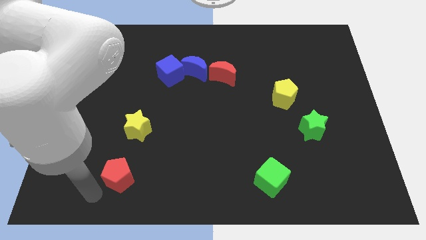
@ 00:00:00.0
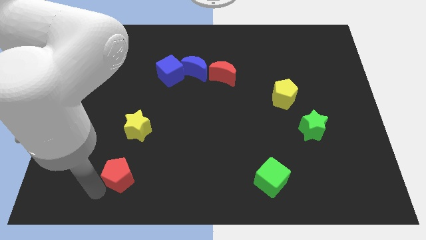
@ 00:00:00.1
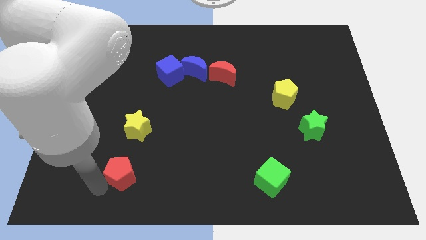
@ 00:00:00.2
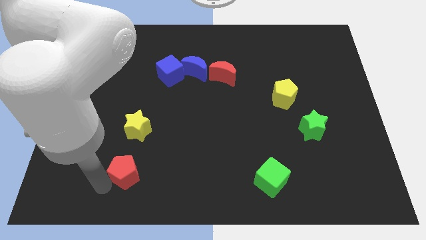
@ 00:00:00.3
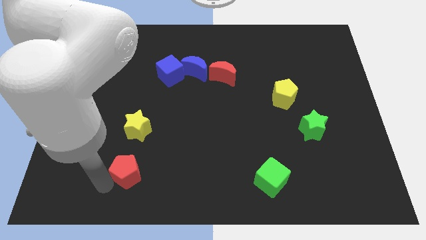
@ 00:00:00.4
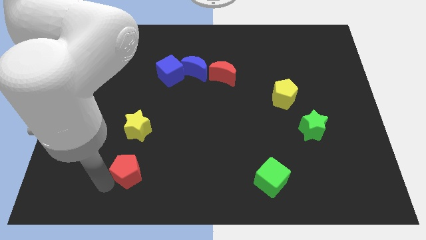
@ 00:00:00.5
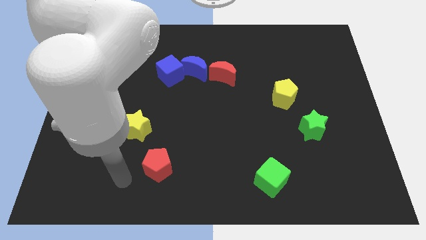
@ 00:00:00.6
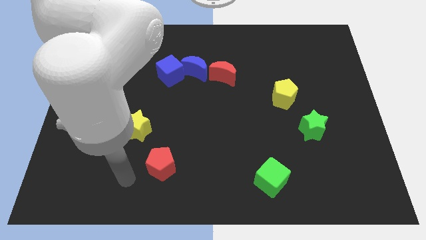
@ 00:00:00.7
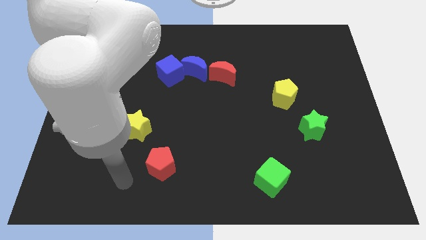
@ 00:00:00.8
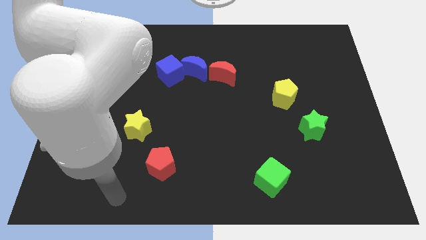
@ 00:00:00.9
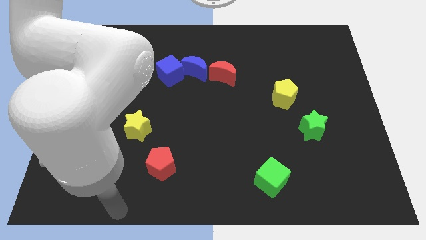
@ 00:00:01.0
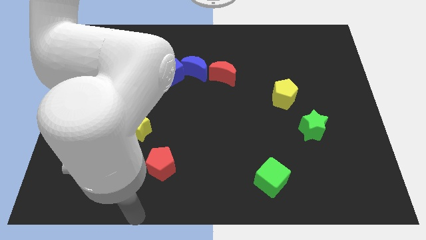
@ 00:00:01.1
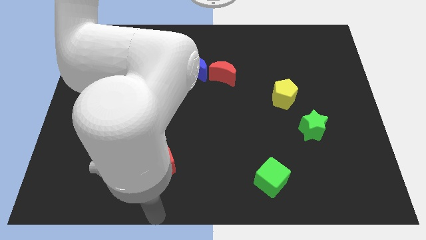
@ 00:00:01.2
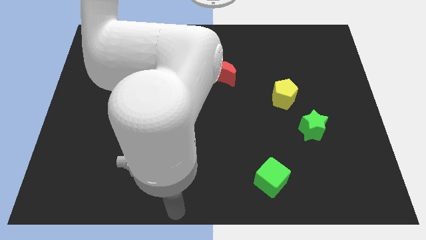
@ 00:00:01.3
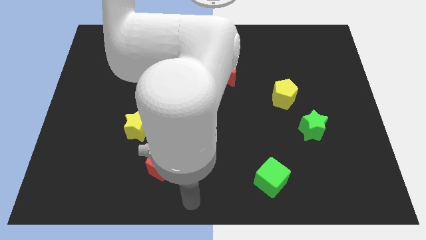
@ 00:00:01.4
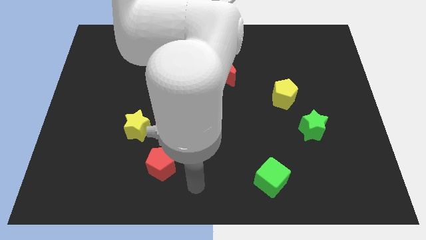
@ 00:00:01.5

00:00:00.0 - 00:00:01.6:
move the red pentagon to the bottom right of the yellow star

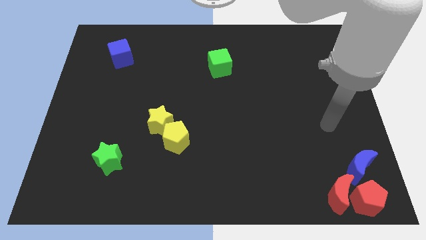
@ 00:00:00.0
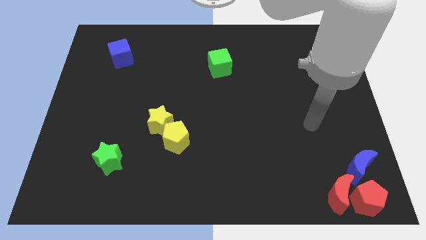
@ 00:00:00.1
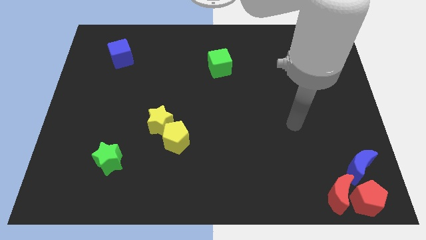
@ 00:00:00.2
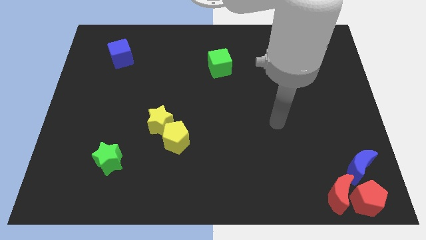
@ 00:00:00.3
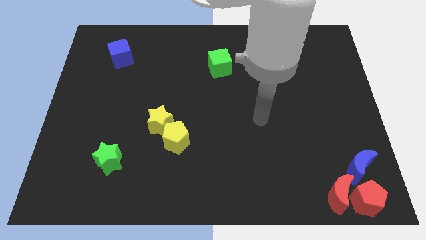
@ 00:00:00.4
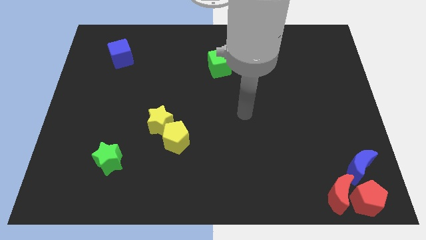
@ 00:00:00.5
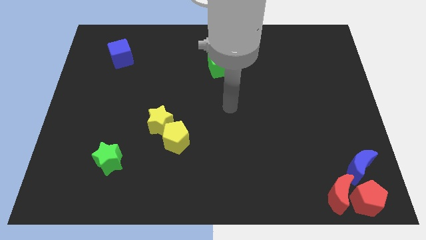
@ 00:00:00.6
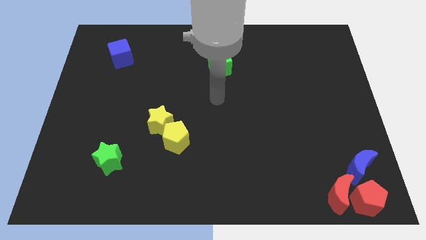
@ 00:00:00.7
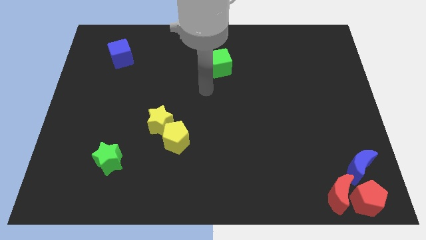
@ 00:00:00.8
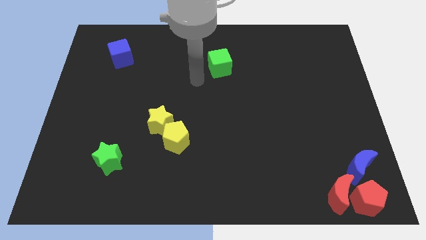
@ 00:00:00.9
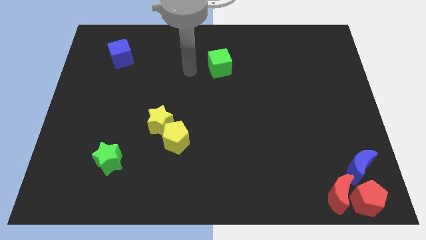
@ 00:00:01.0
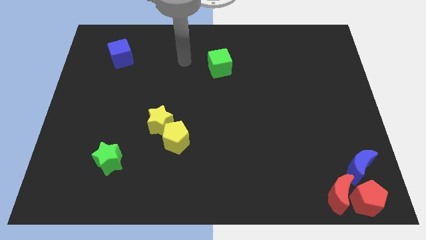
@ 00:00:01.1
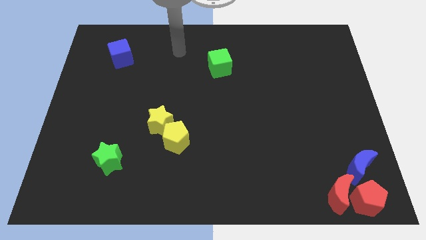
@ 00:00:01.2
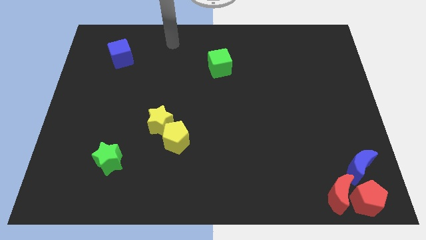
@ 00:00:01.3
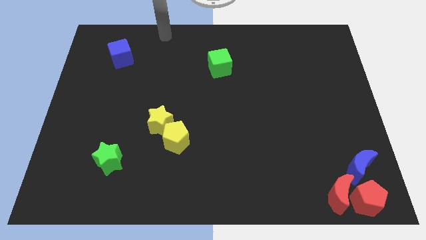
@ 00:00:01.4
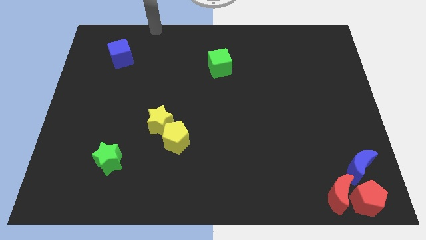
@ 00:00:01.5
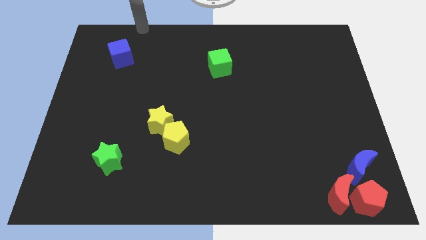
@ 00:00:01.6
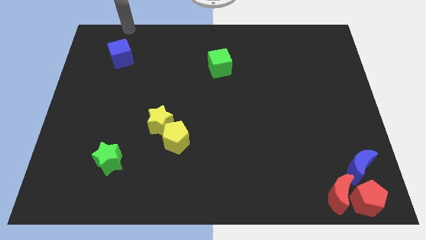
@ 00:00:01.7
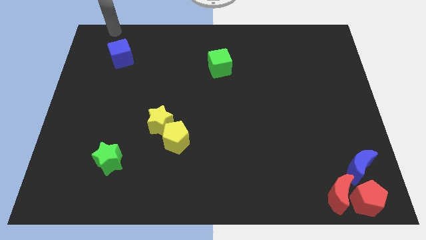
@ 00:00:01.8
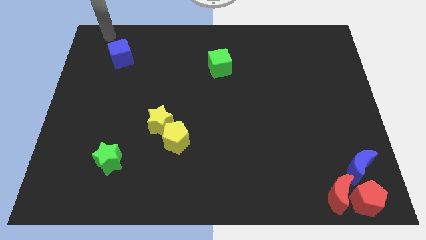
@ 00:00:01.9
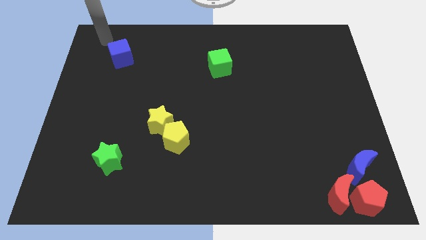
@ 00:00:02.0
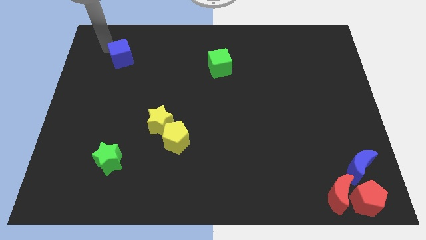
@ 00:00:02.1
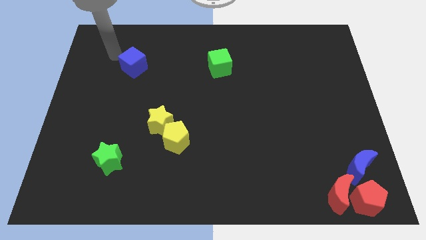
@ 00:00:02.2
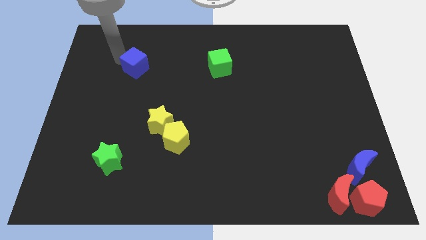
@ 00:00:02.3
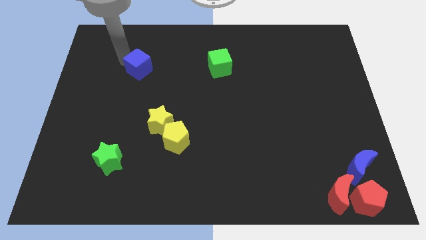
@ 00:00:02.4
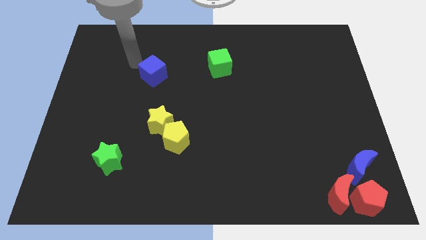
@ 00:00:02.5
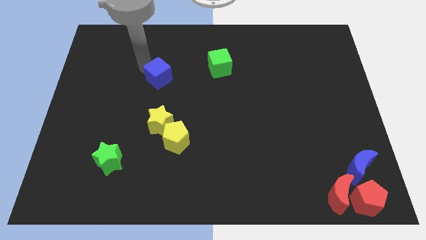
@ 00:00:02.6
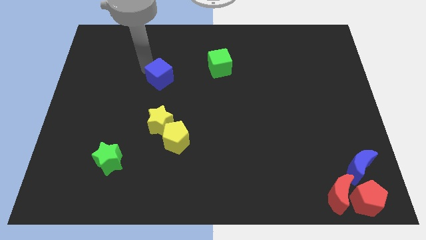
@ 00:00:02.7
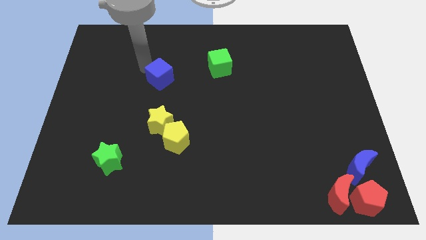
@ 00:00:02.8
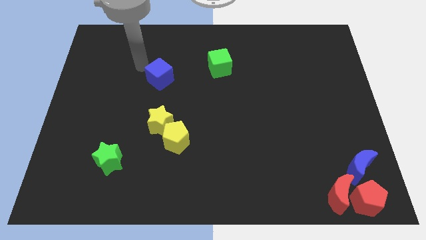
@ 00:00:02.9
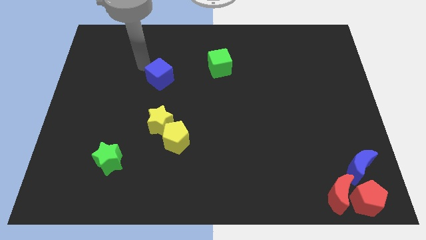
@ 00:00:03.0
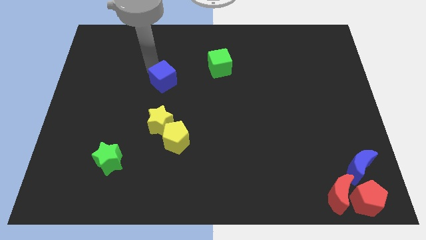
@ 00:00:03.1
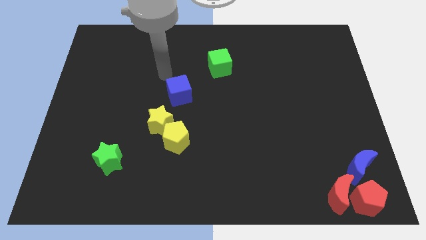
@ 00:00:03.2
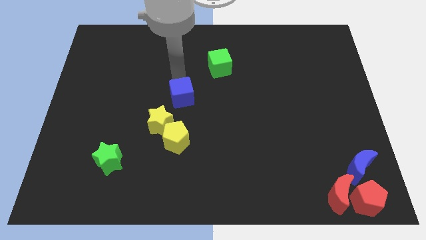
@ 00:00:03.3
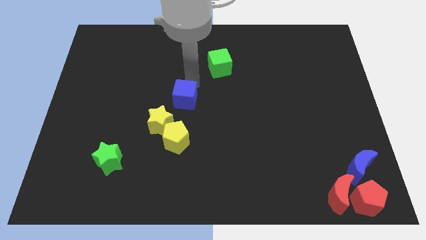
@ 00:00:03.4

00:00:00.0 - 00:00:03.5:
place the blue cube on the top right of the yellow star

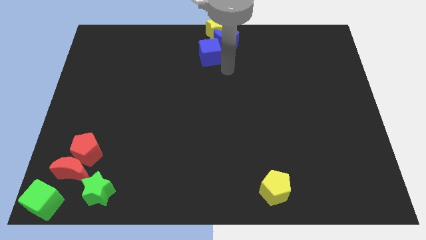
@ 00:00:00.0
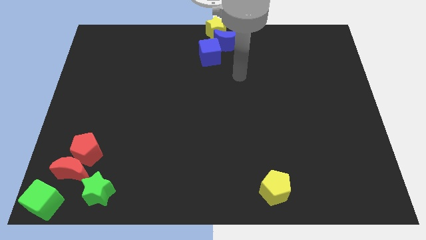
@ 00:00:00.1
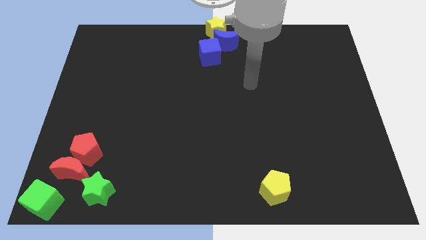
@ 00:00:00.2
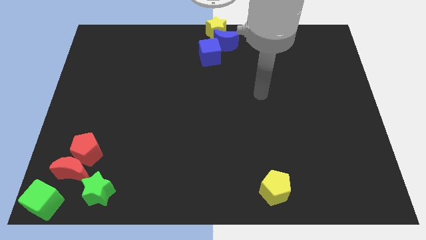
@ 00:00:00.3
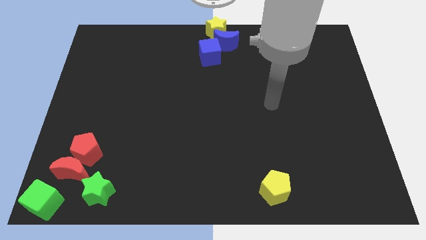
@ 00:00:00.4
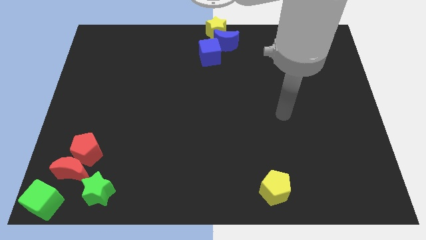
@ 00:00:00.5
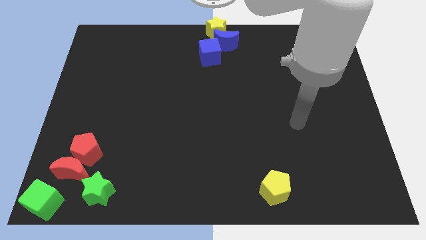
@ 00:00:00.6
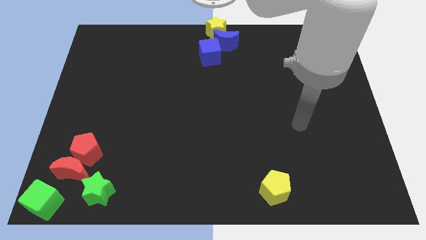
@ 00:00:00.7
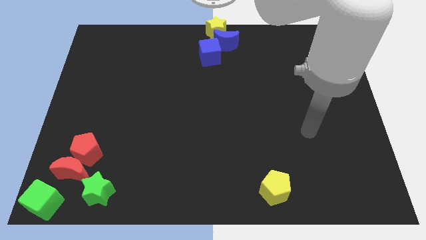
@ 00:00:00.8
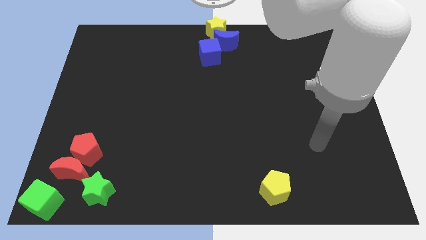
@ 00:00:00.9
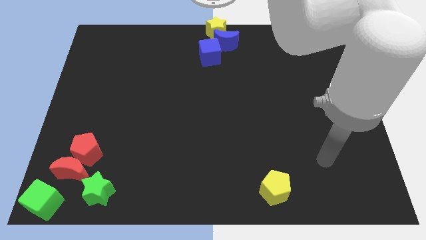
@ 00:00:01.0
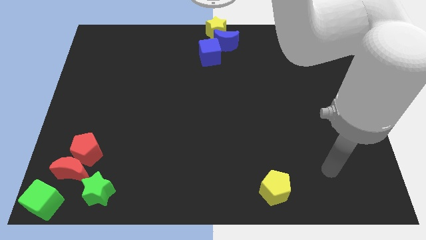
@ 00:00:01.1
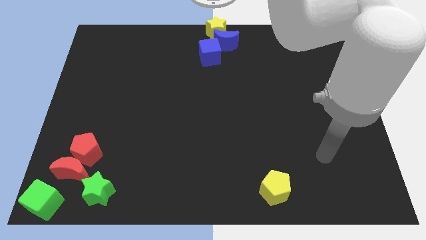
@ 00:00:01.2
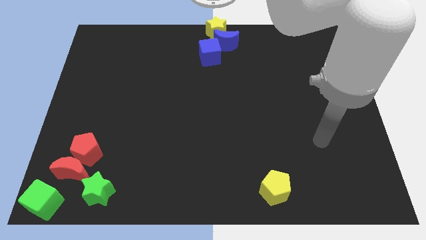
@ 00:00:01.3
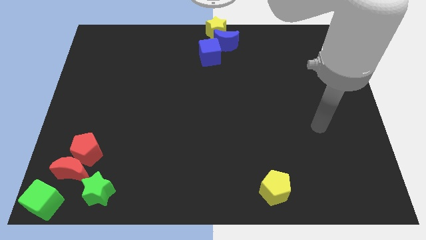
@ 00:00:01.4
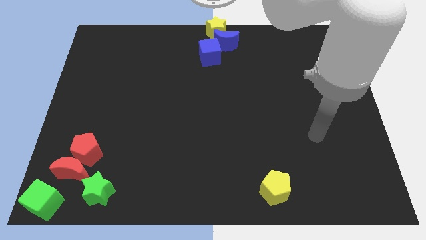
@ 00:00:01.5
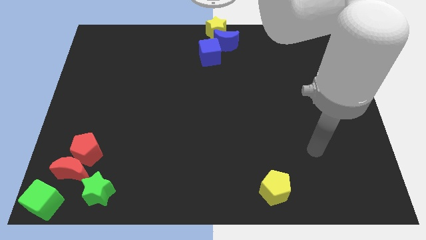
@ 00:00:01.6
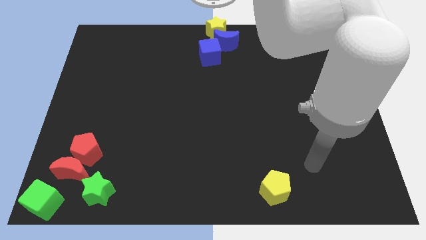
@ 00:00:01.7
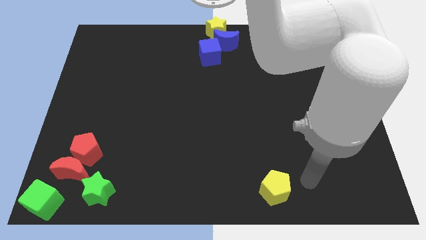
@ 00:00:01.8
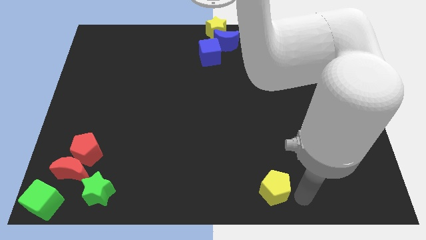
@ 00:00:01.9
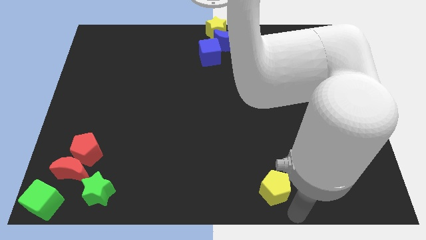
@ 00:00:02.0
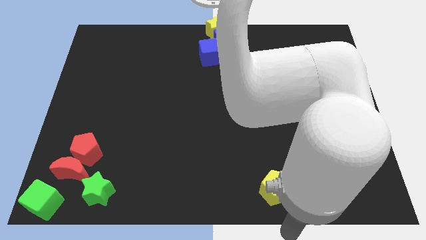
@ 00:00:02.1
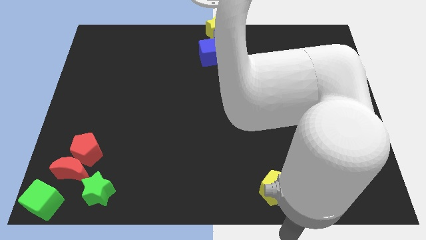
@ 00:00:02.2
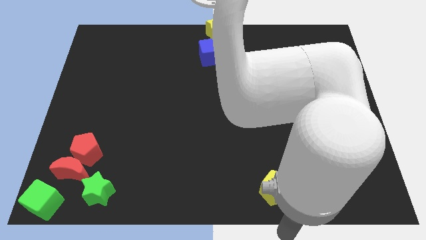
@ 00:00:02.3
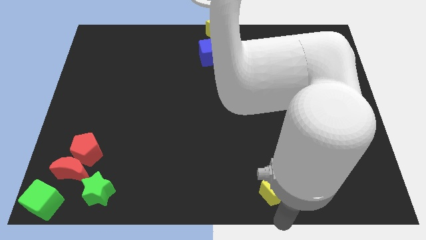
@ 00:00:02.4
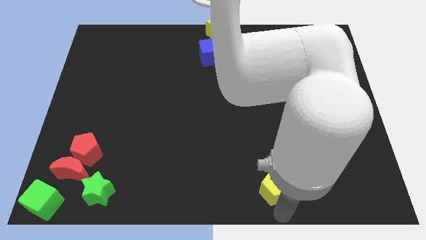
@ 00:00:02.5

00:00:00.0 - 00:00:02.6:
point your arm below yellow pentagon

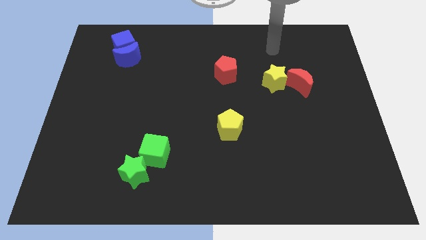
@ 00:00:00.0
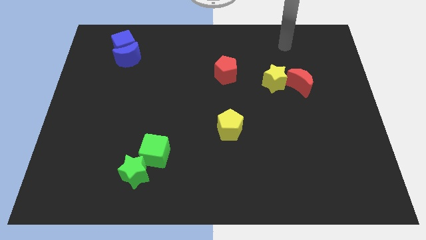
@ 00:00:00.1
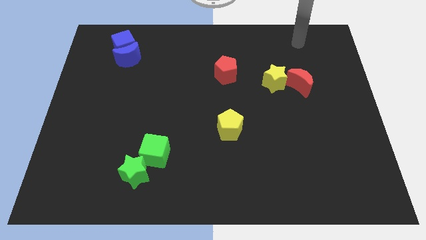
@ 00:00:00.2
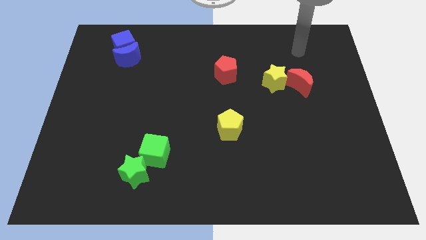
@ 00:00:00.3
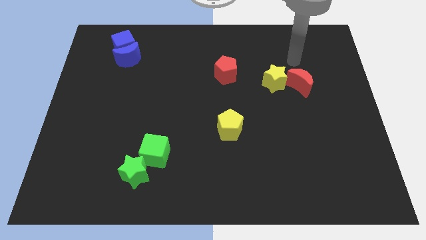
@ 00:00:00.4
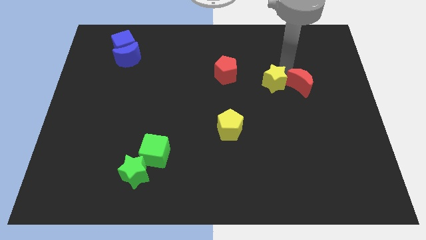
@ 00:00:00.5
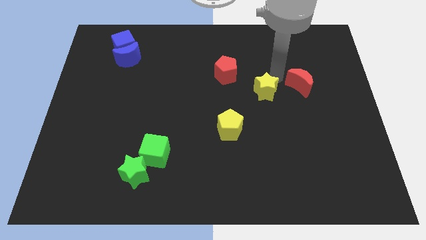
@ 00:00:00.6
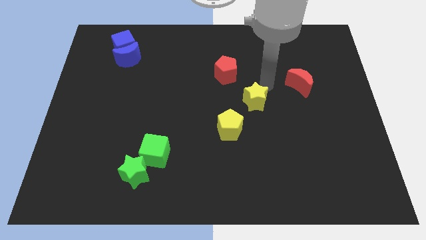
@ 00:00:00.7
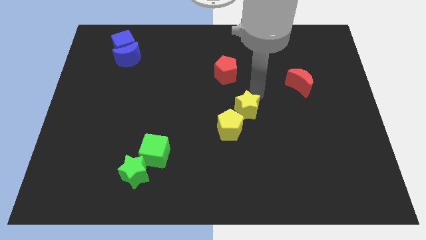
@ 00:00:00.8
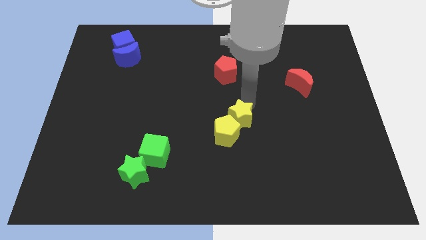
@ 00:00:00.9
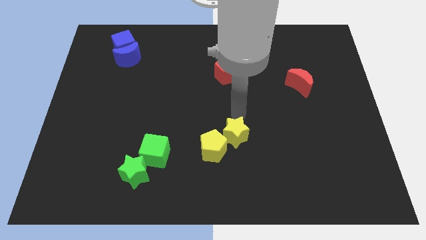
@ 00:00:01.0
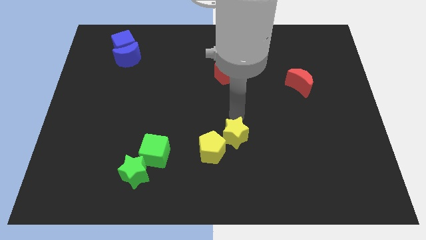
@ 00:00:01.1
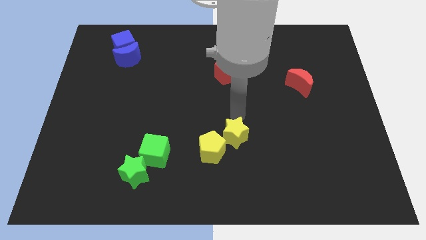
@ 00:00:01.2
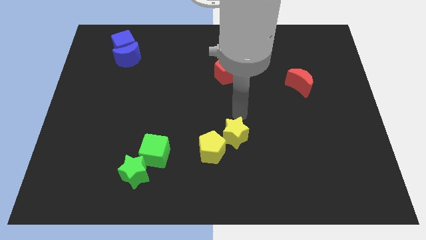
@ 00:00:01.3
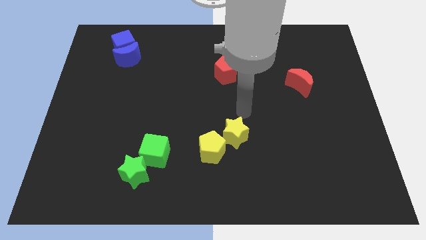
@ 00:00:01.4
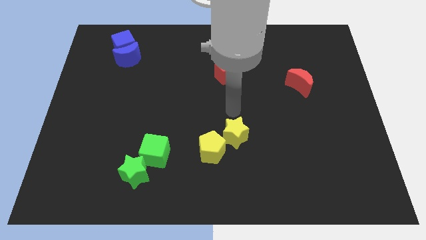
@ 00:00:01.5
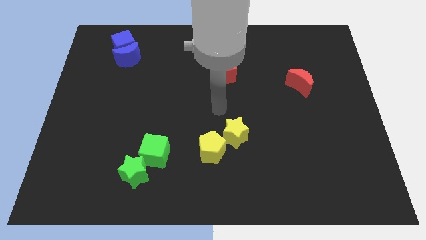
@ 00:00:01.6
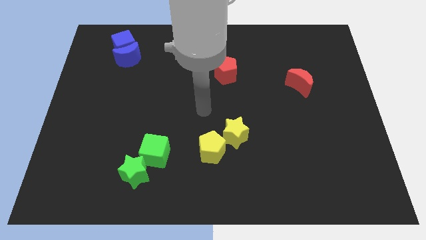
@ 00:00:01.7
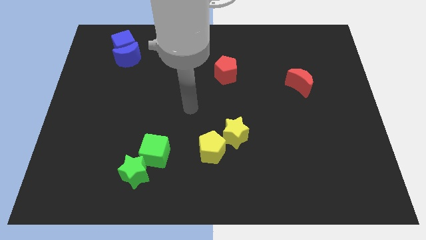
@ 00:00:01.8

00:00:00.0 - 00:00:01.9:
push the yellow star into the yellow pentagon
